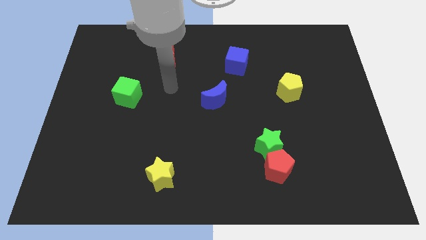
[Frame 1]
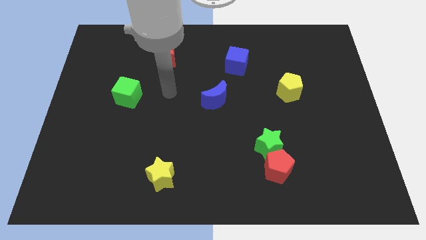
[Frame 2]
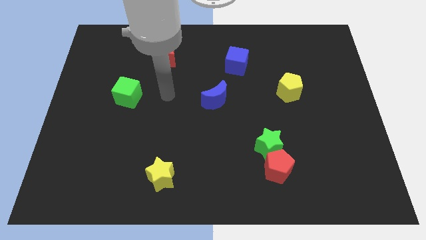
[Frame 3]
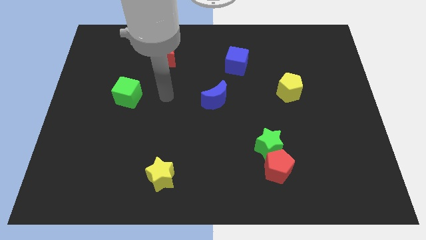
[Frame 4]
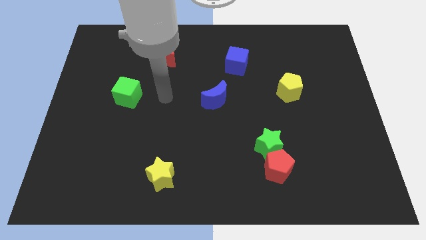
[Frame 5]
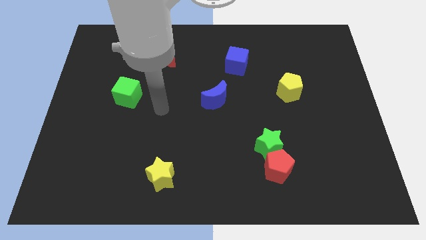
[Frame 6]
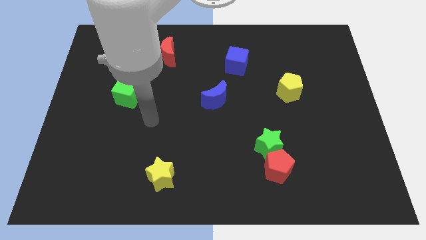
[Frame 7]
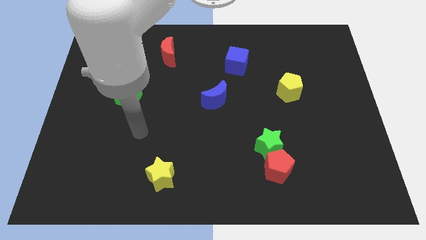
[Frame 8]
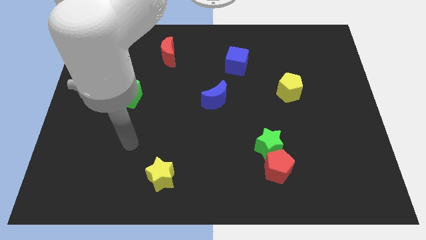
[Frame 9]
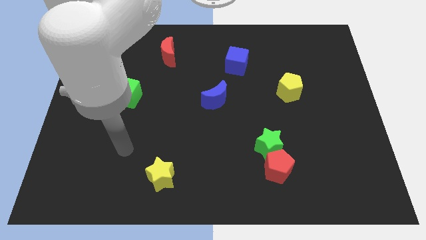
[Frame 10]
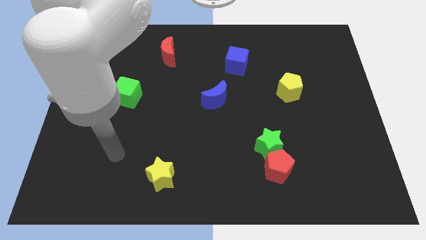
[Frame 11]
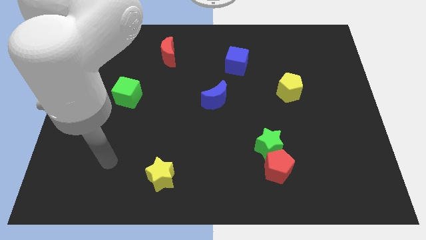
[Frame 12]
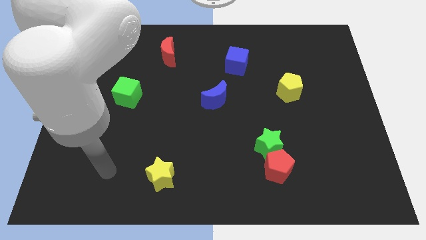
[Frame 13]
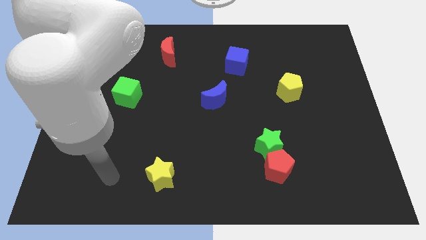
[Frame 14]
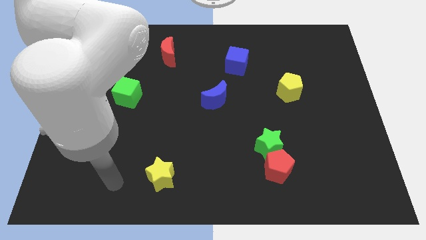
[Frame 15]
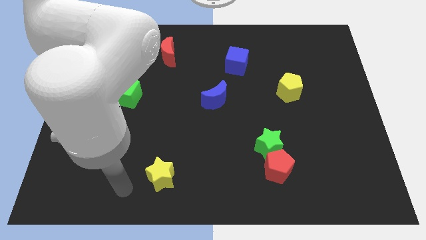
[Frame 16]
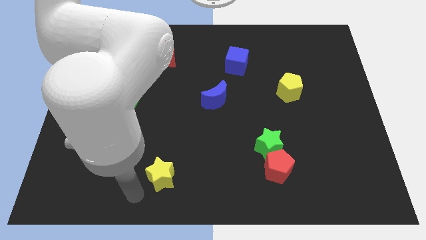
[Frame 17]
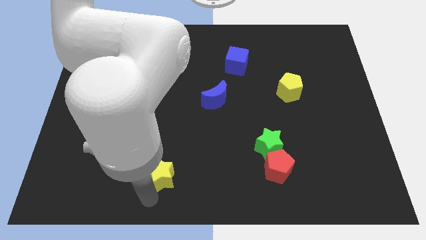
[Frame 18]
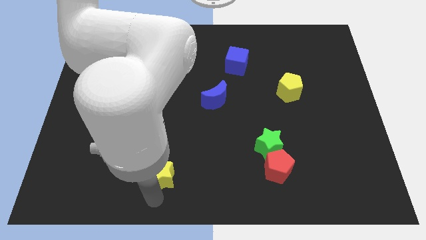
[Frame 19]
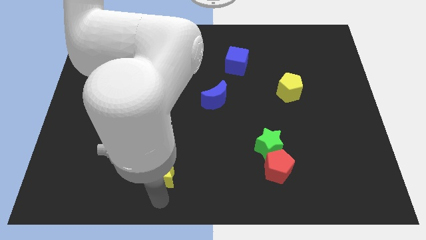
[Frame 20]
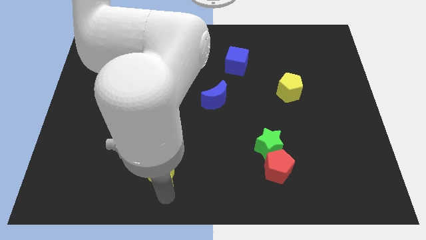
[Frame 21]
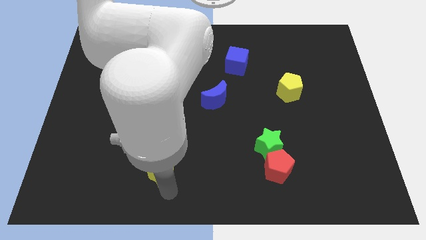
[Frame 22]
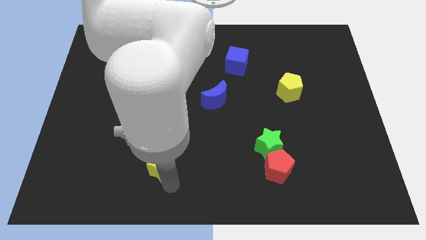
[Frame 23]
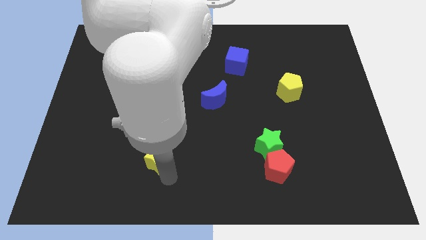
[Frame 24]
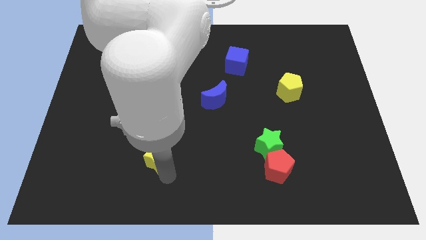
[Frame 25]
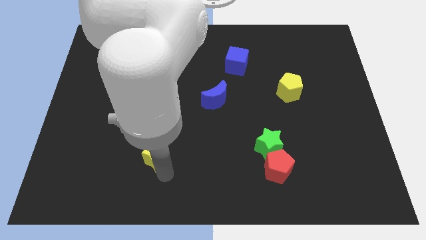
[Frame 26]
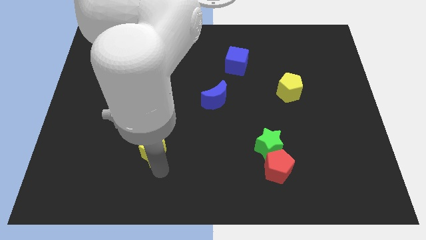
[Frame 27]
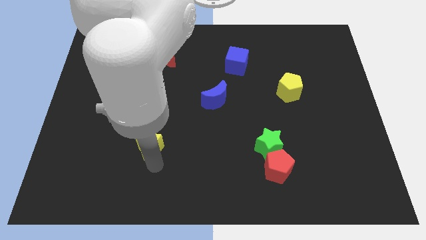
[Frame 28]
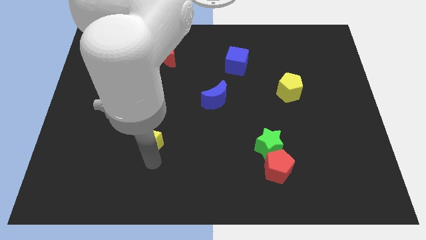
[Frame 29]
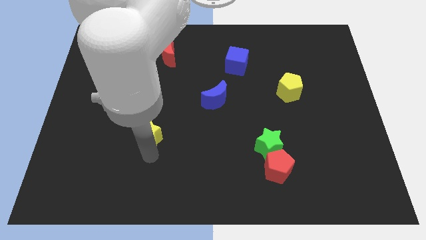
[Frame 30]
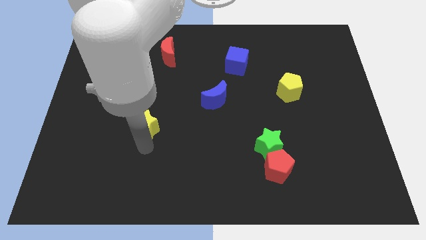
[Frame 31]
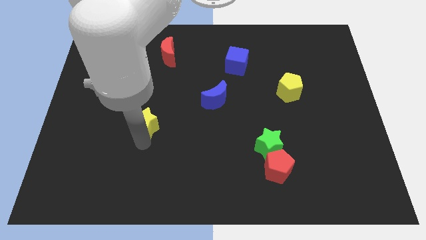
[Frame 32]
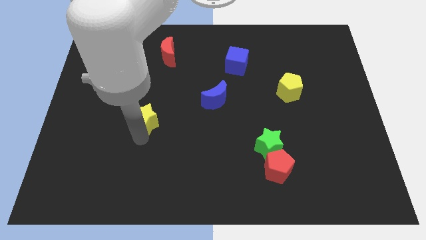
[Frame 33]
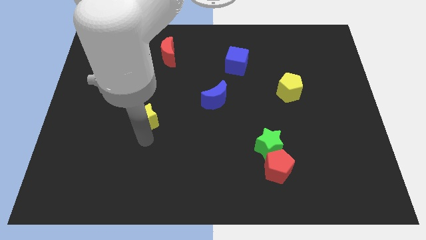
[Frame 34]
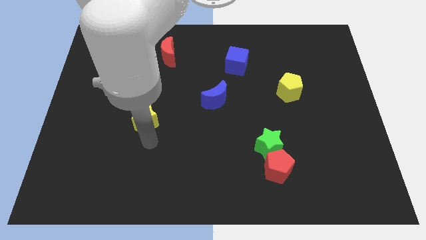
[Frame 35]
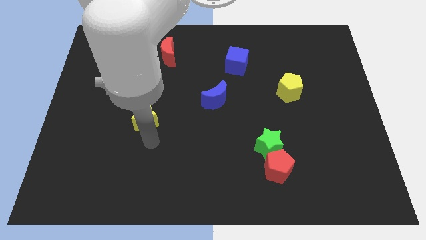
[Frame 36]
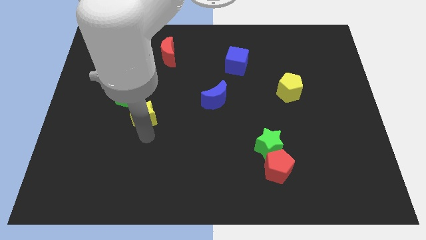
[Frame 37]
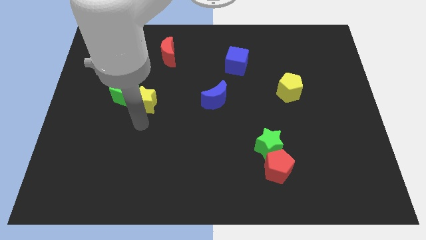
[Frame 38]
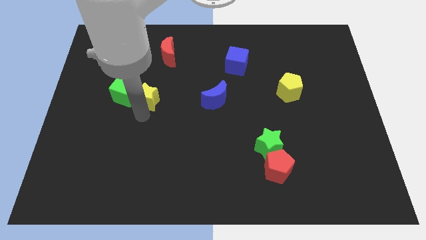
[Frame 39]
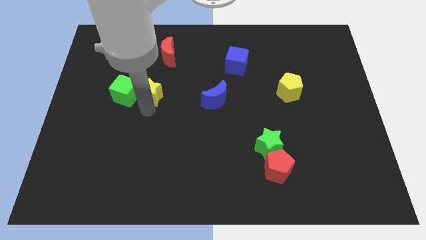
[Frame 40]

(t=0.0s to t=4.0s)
place the yellow star in between green cube and blue moon

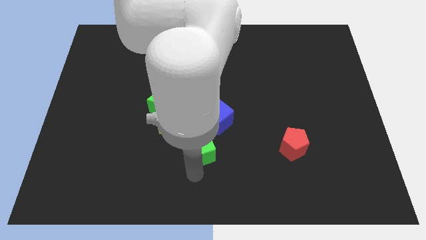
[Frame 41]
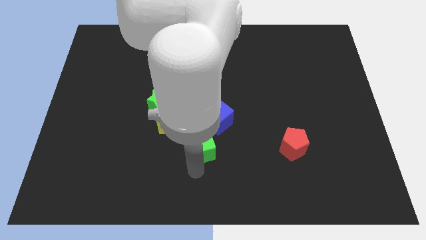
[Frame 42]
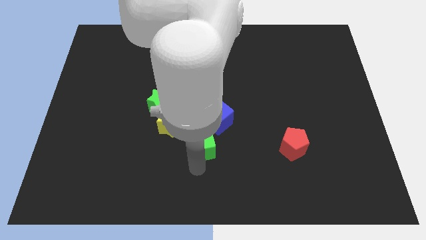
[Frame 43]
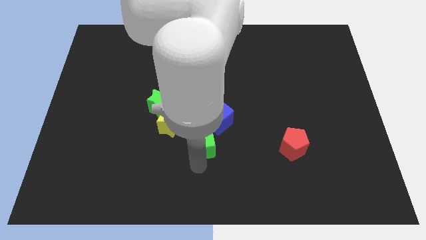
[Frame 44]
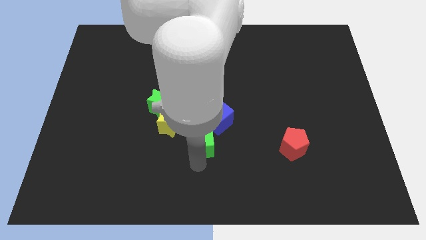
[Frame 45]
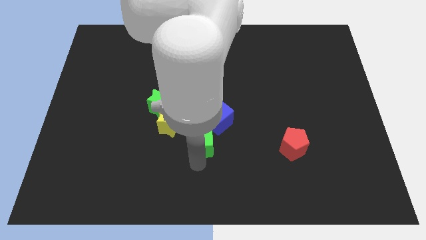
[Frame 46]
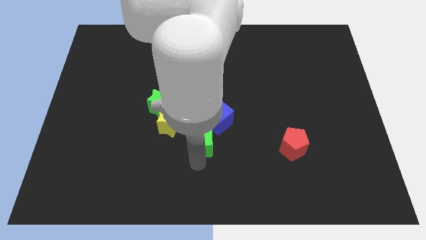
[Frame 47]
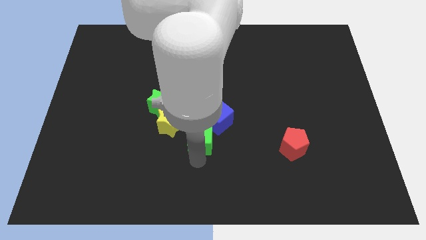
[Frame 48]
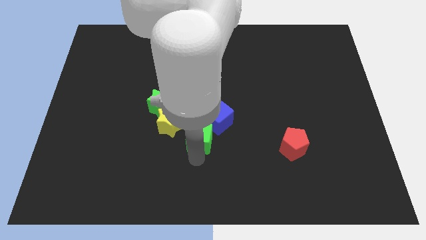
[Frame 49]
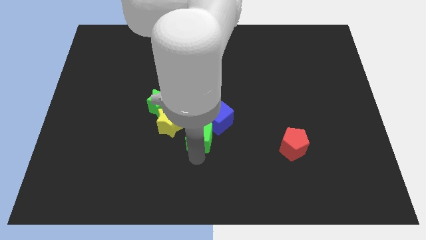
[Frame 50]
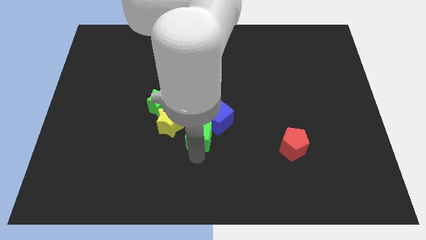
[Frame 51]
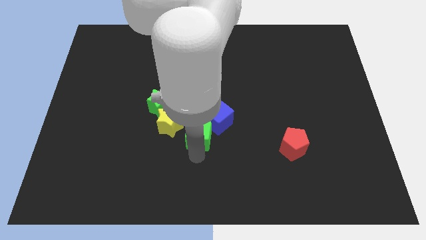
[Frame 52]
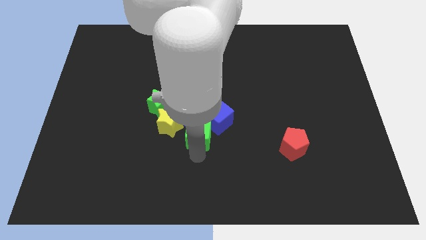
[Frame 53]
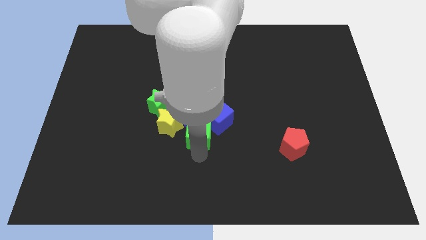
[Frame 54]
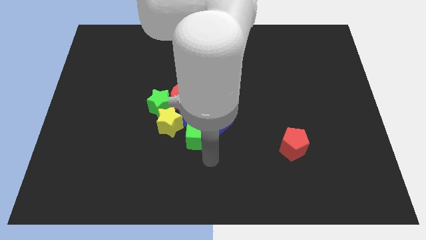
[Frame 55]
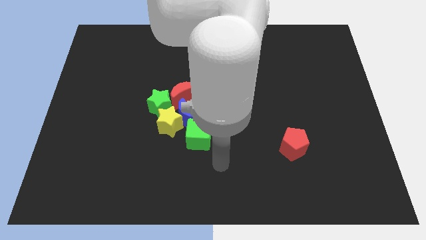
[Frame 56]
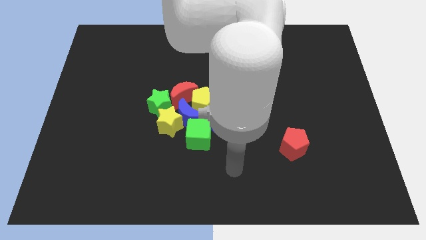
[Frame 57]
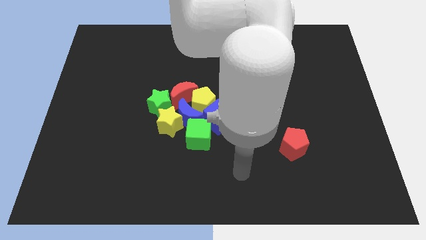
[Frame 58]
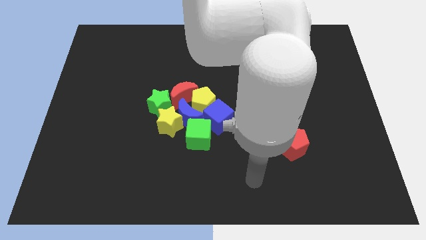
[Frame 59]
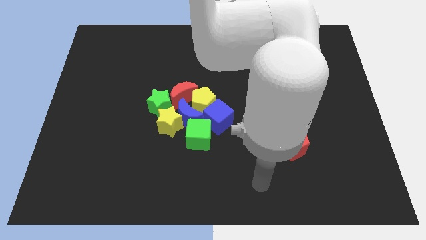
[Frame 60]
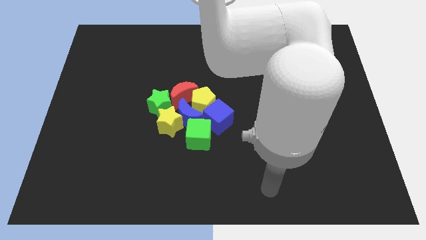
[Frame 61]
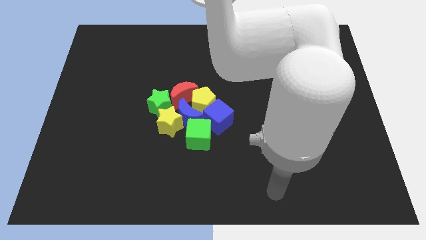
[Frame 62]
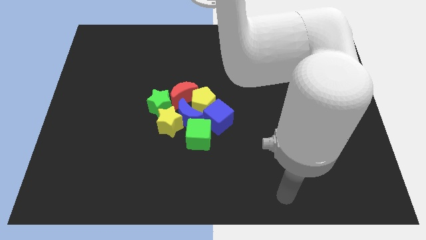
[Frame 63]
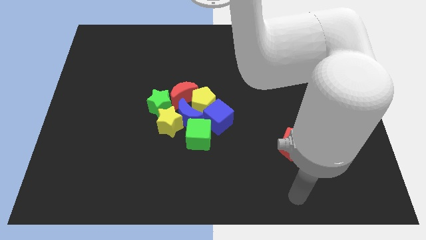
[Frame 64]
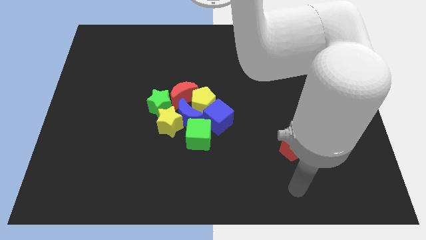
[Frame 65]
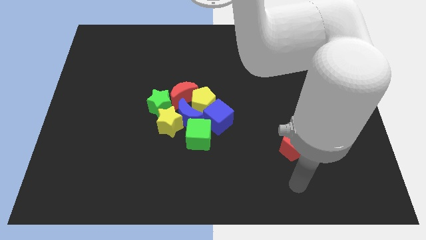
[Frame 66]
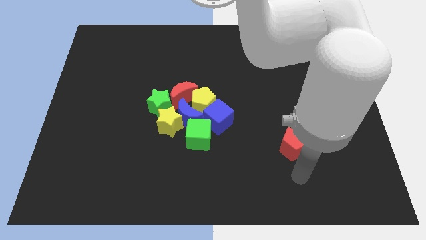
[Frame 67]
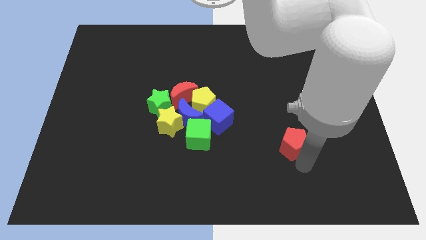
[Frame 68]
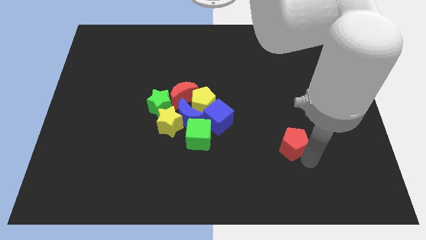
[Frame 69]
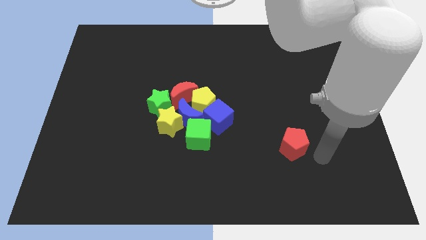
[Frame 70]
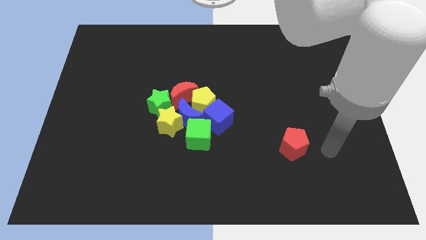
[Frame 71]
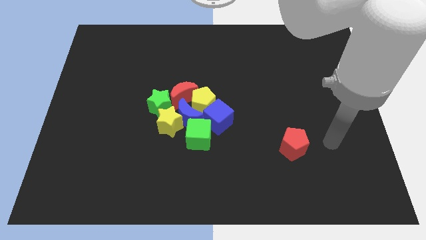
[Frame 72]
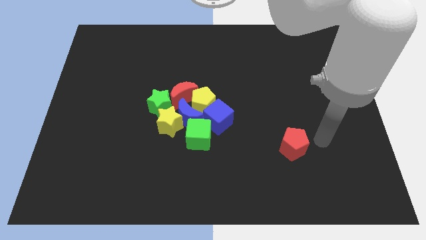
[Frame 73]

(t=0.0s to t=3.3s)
push the green cube into the group of blocks

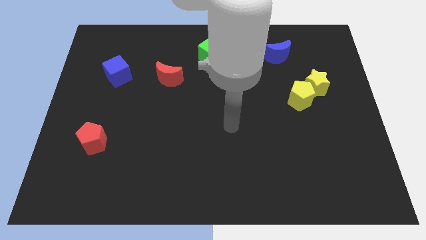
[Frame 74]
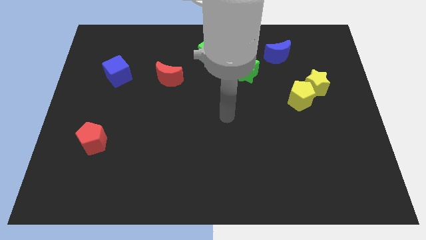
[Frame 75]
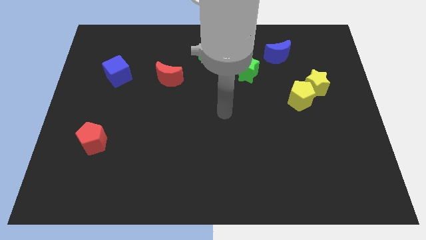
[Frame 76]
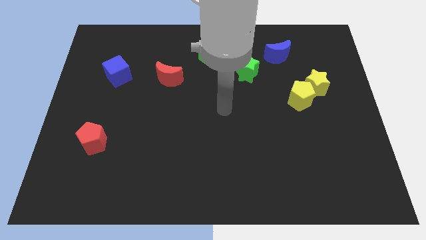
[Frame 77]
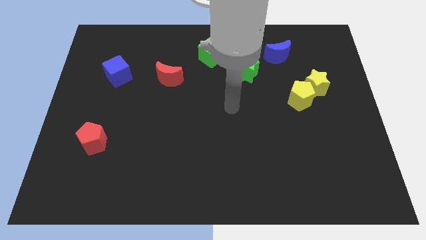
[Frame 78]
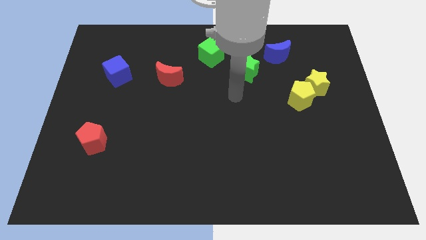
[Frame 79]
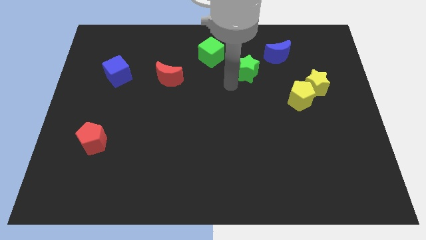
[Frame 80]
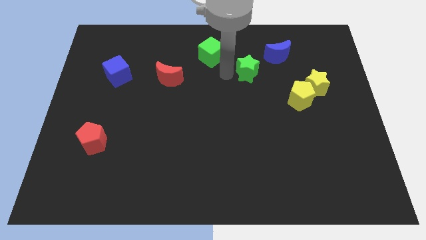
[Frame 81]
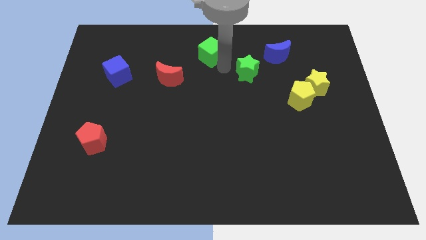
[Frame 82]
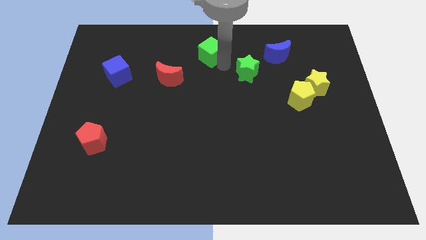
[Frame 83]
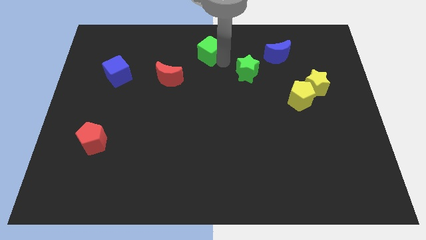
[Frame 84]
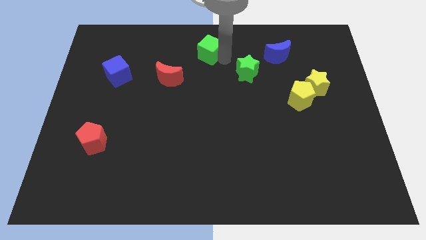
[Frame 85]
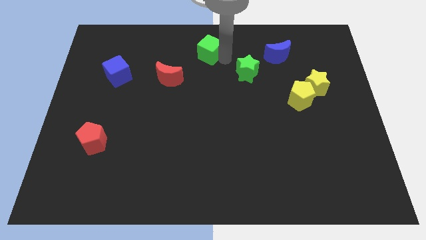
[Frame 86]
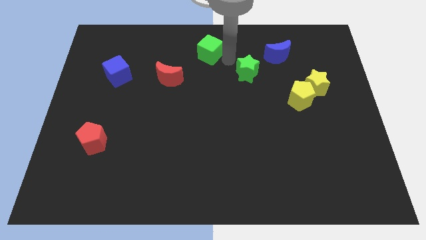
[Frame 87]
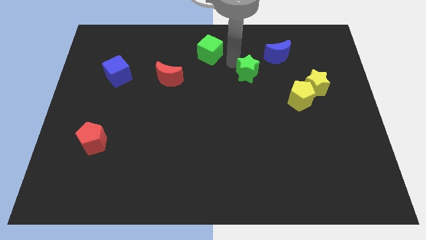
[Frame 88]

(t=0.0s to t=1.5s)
move the green cube slightly up
